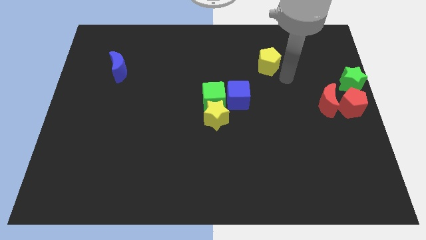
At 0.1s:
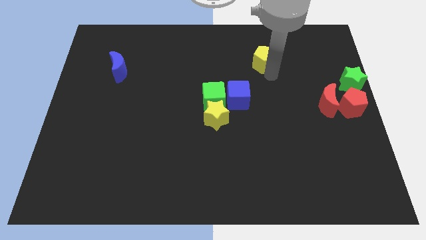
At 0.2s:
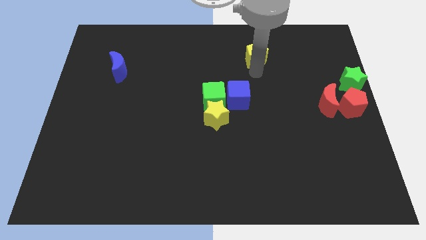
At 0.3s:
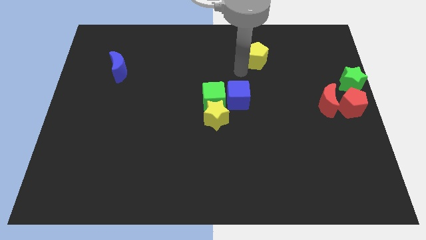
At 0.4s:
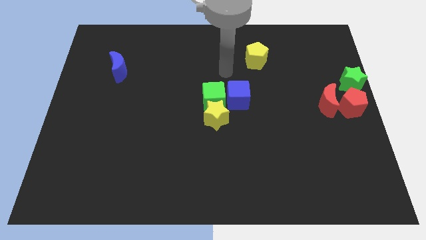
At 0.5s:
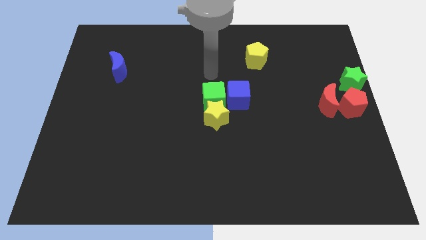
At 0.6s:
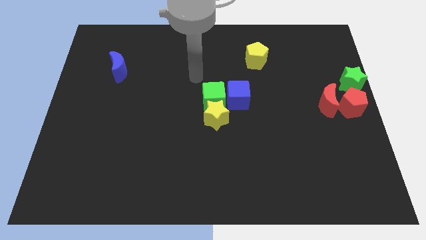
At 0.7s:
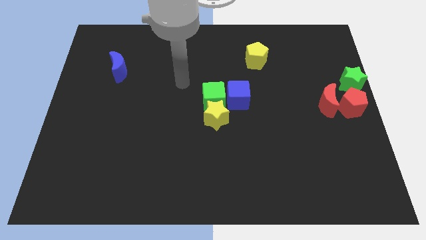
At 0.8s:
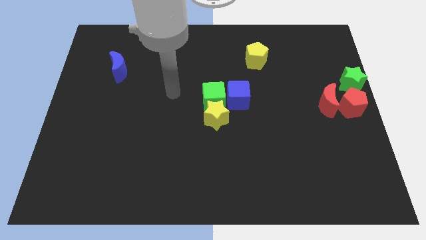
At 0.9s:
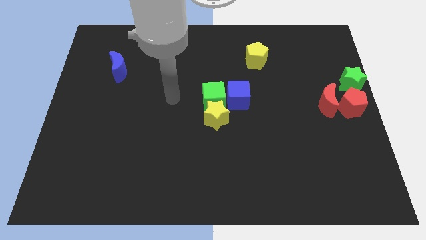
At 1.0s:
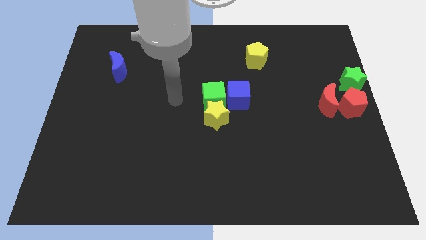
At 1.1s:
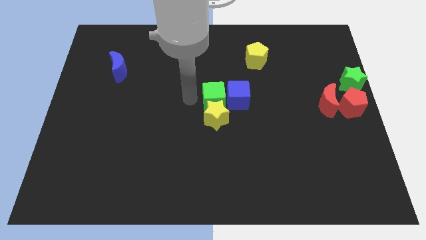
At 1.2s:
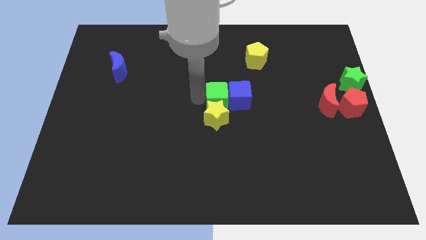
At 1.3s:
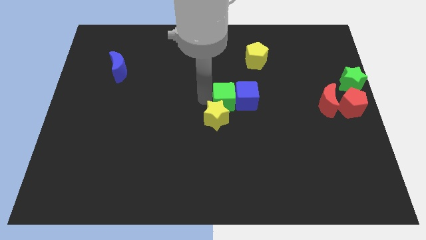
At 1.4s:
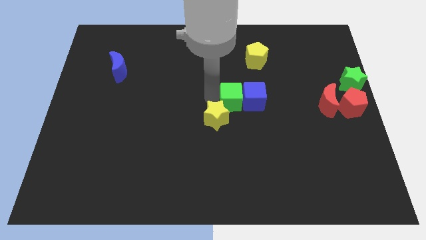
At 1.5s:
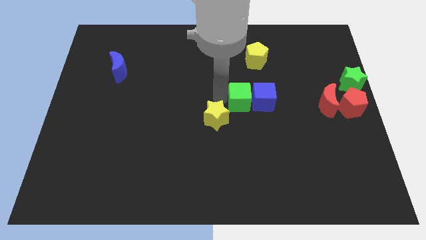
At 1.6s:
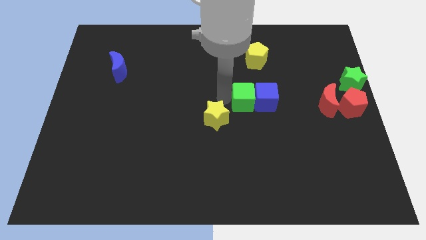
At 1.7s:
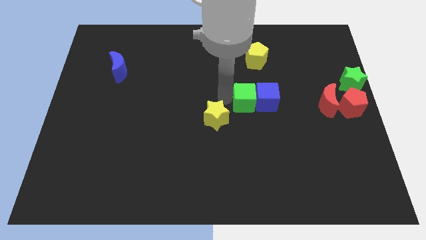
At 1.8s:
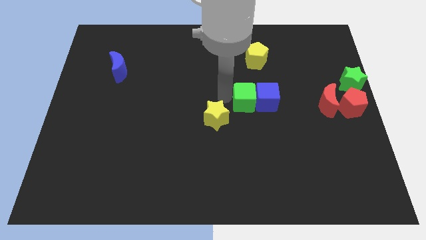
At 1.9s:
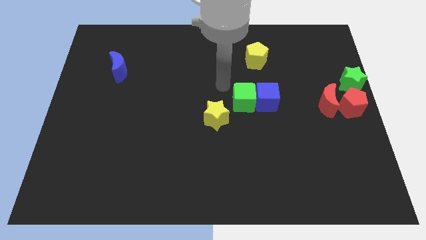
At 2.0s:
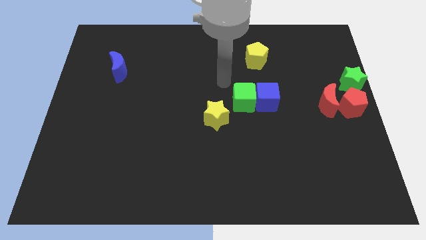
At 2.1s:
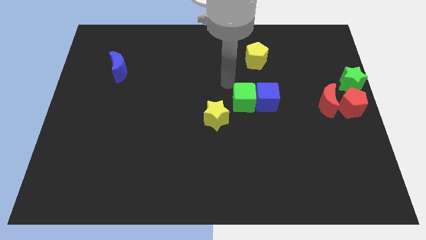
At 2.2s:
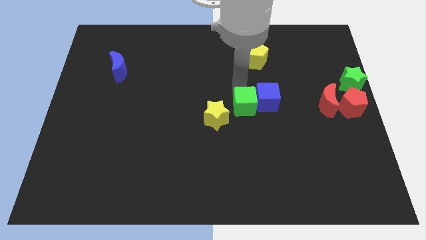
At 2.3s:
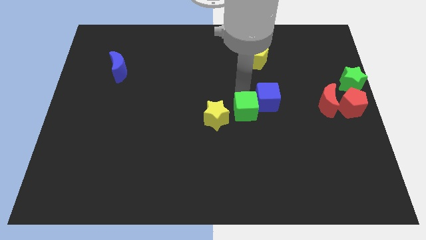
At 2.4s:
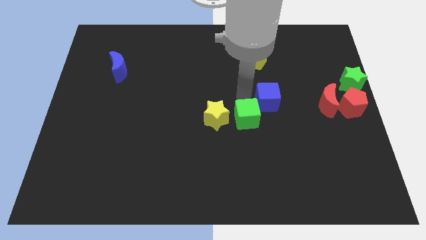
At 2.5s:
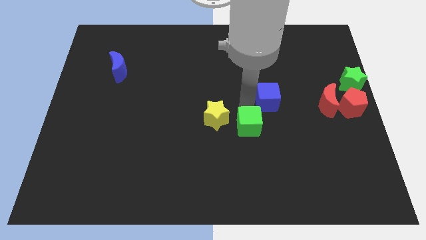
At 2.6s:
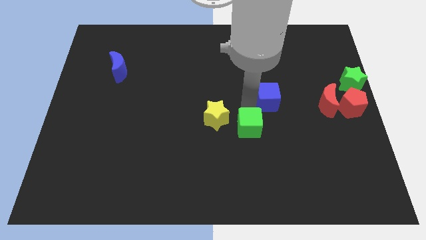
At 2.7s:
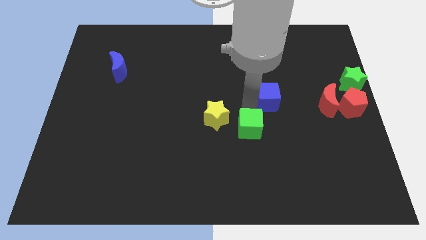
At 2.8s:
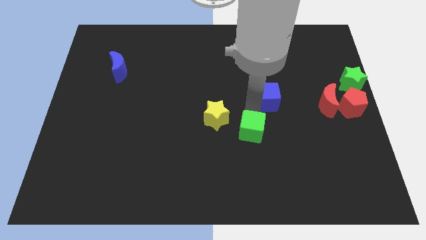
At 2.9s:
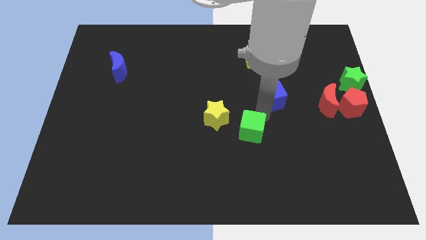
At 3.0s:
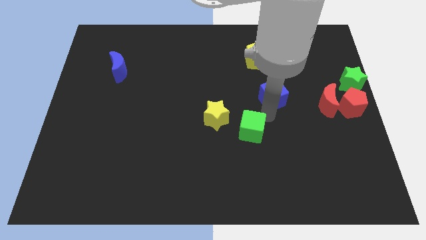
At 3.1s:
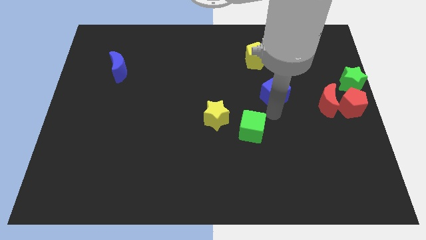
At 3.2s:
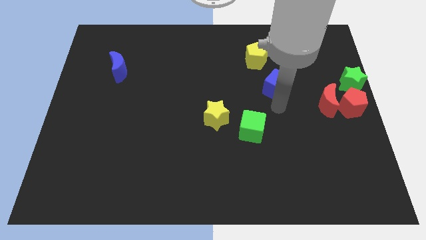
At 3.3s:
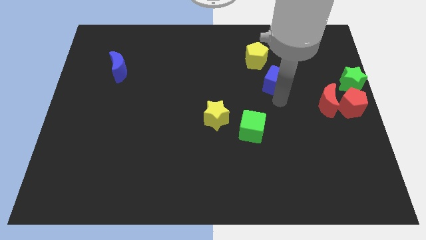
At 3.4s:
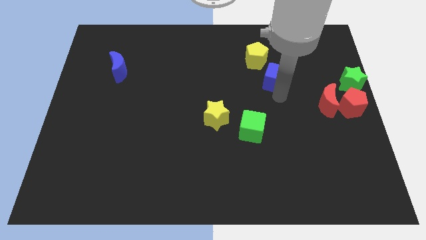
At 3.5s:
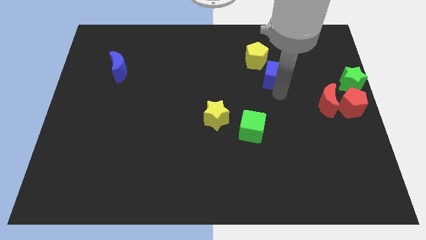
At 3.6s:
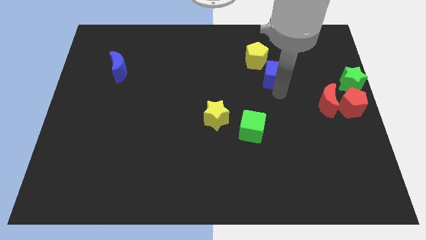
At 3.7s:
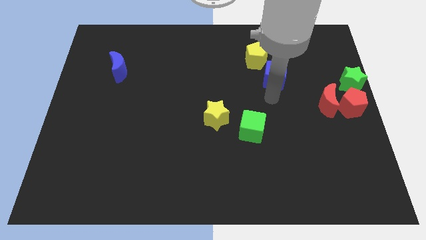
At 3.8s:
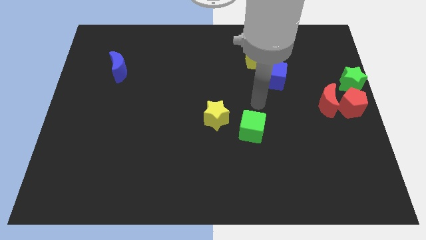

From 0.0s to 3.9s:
slightly push the green cube down

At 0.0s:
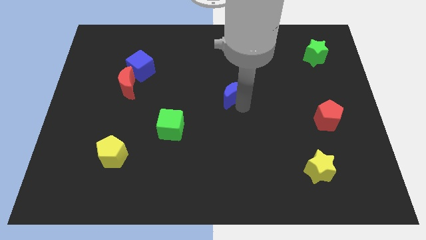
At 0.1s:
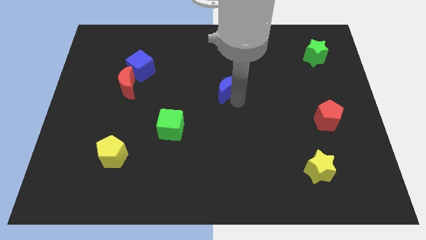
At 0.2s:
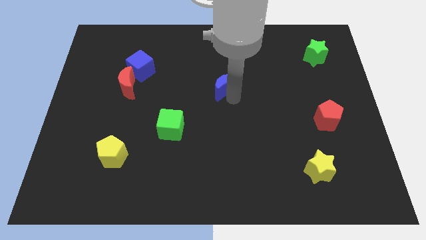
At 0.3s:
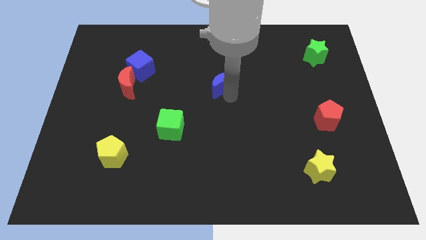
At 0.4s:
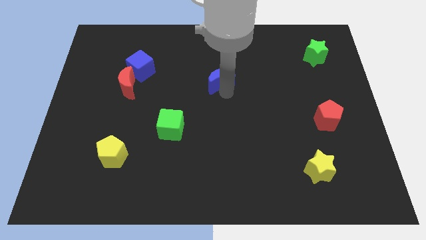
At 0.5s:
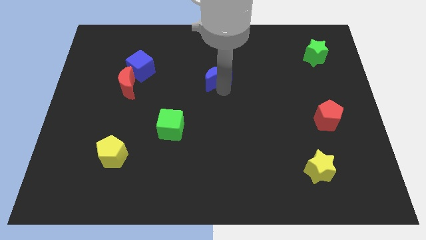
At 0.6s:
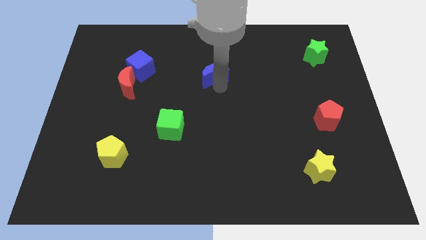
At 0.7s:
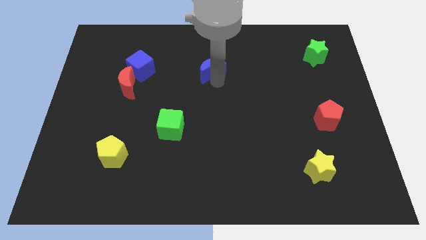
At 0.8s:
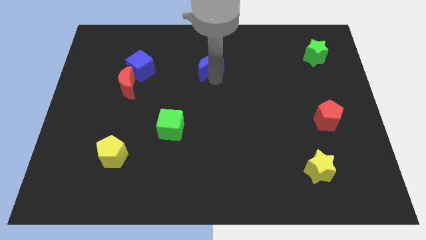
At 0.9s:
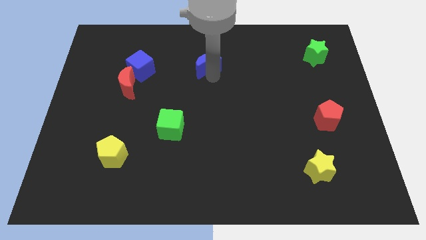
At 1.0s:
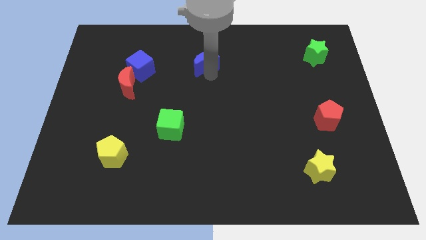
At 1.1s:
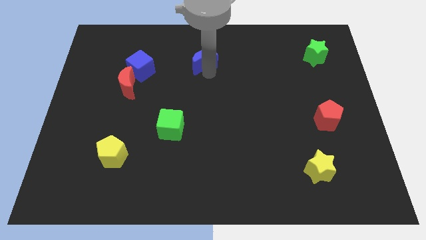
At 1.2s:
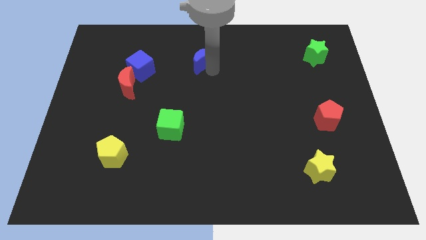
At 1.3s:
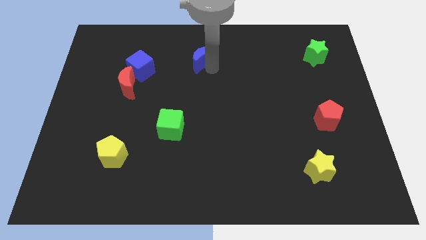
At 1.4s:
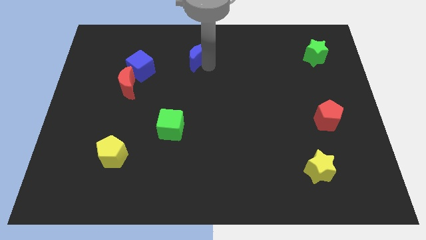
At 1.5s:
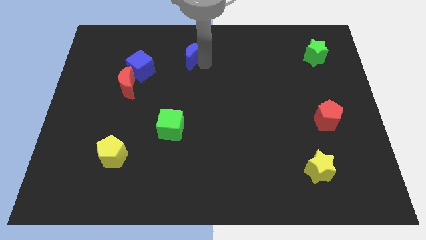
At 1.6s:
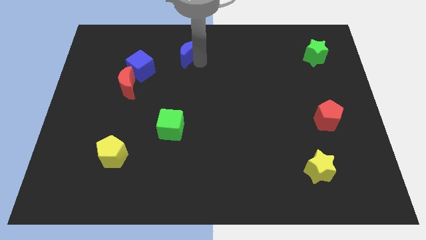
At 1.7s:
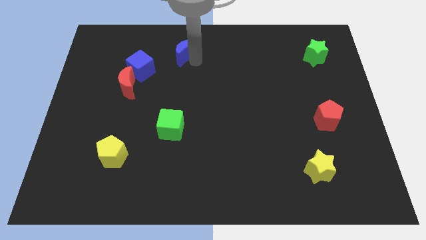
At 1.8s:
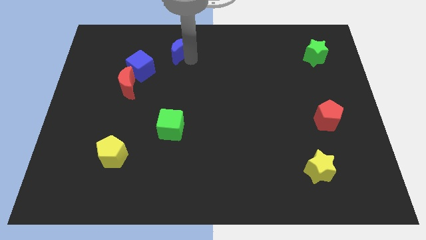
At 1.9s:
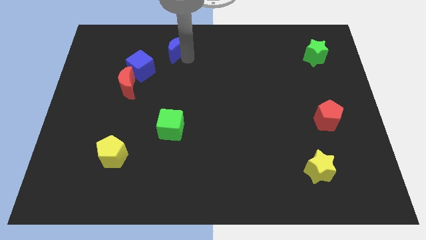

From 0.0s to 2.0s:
slide the blue moon to the top right side of the blue cube

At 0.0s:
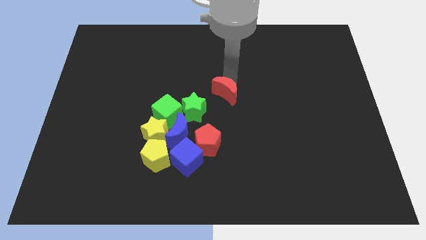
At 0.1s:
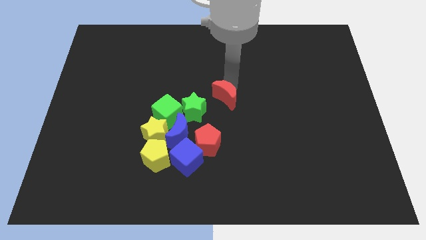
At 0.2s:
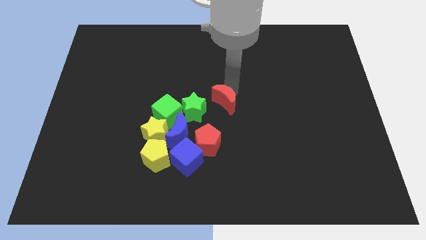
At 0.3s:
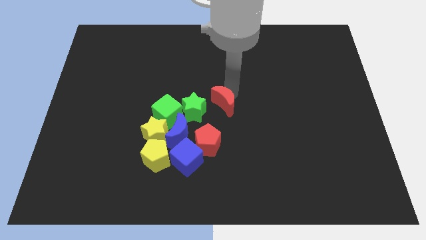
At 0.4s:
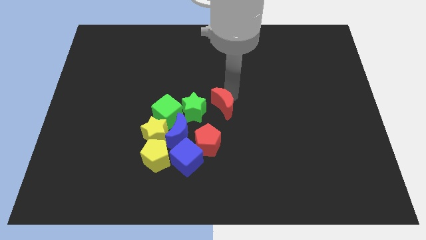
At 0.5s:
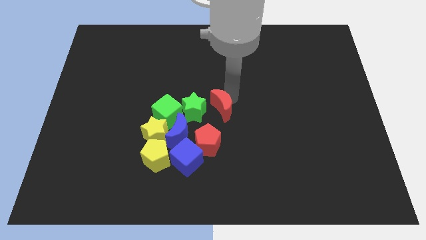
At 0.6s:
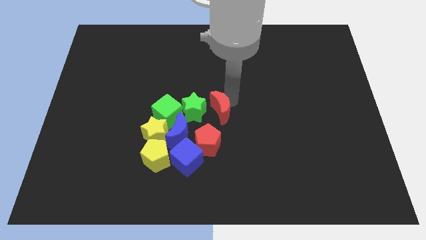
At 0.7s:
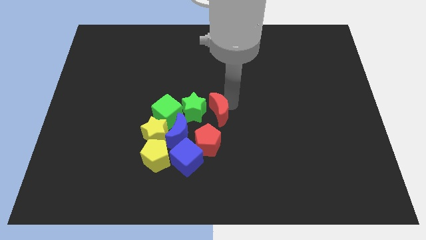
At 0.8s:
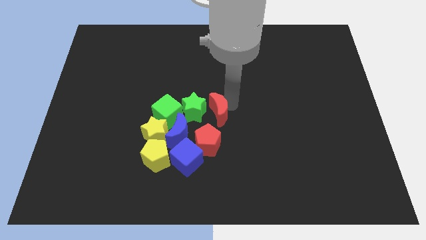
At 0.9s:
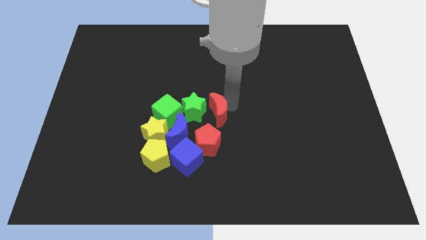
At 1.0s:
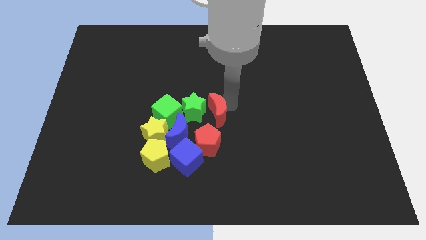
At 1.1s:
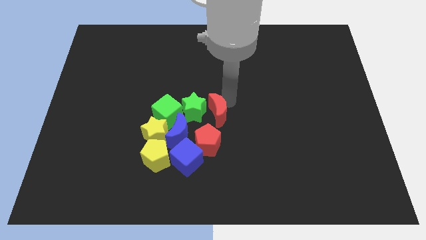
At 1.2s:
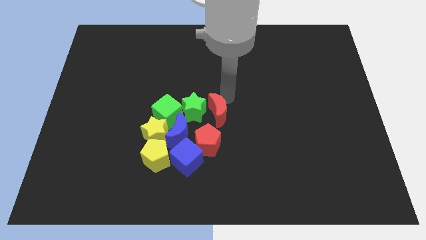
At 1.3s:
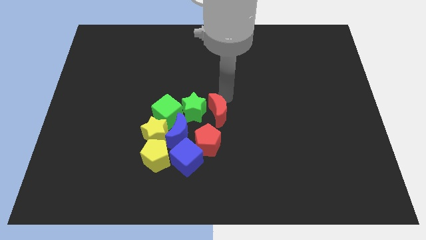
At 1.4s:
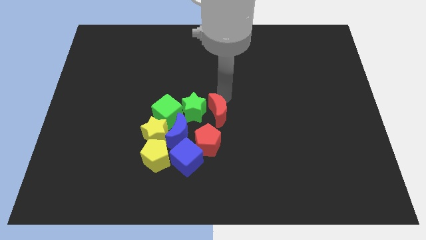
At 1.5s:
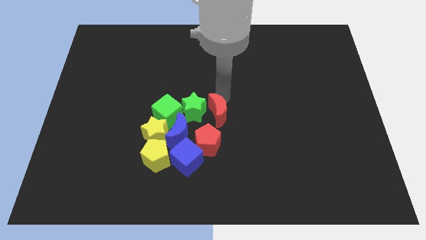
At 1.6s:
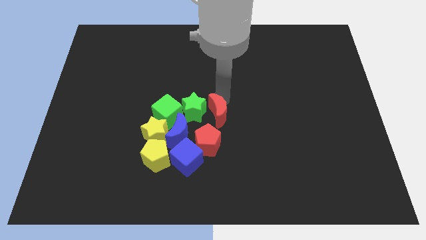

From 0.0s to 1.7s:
drag the red crescent towards the group of blocks

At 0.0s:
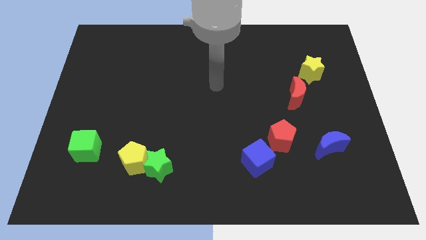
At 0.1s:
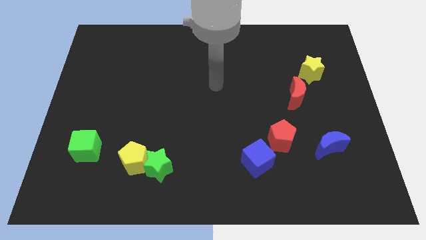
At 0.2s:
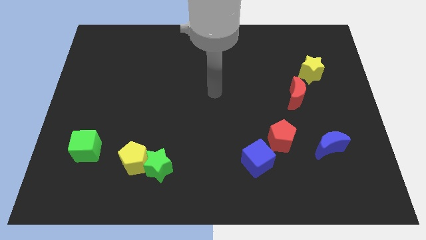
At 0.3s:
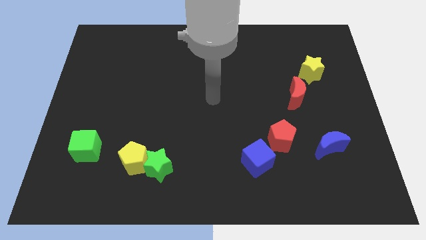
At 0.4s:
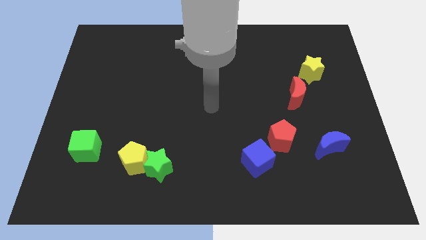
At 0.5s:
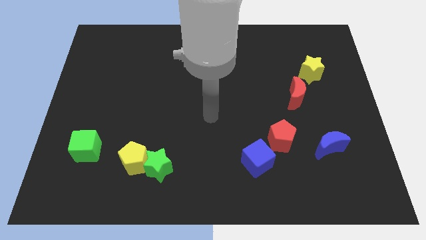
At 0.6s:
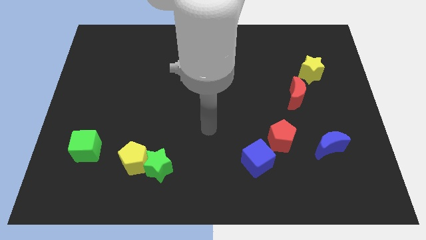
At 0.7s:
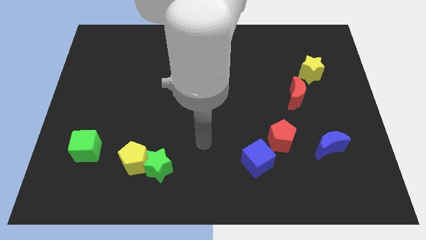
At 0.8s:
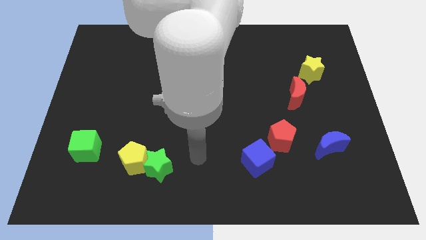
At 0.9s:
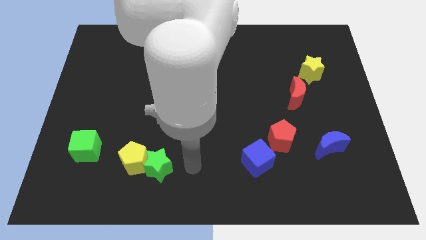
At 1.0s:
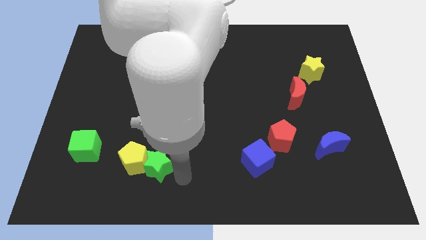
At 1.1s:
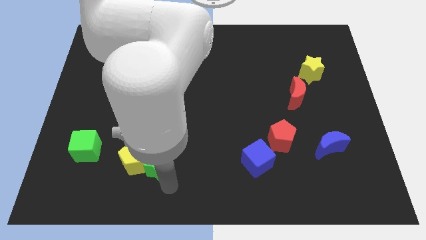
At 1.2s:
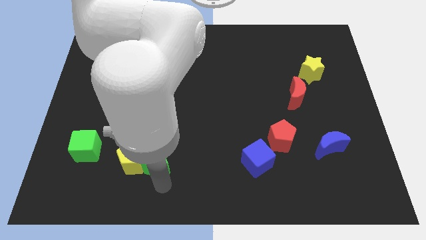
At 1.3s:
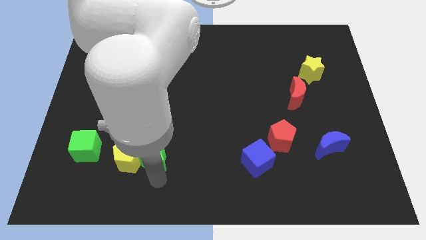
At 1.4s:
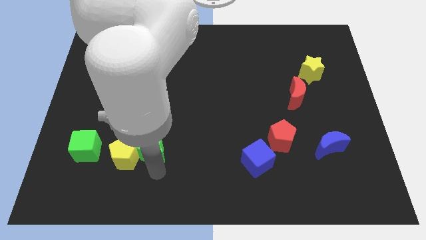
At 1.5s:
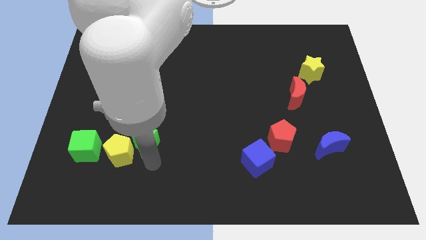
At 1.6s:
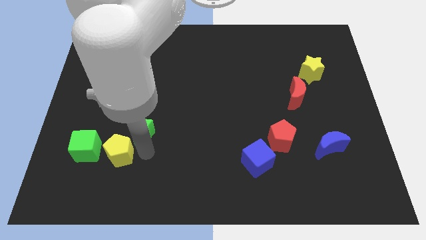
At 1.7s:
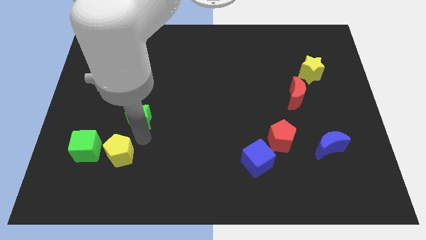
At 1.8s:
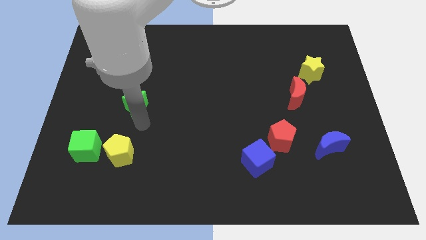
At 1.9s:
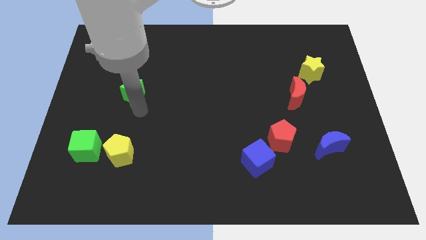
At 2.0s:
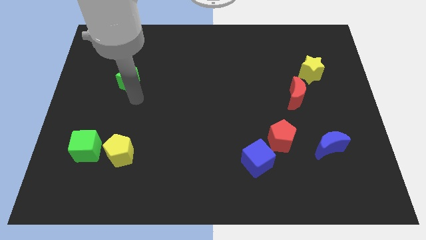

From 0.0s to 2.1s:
separate green star from the yellow pentagon
